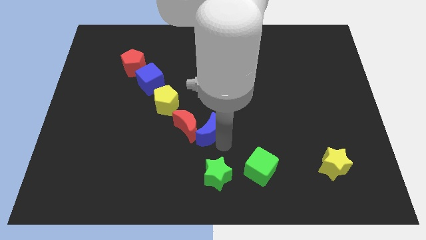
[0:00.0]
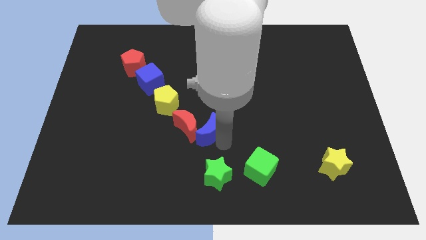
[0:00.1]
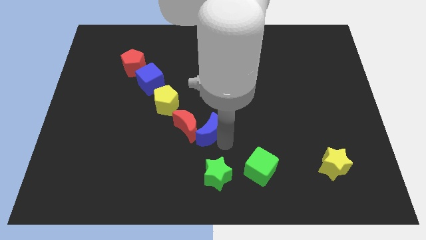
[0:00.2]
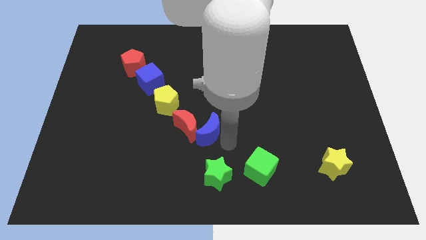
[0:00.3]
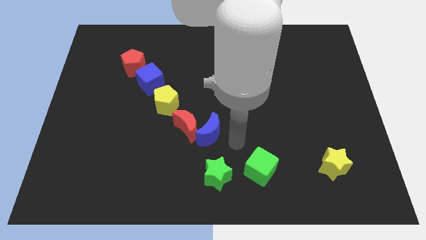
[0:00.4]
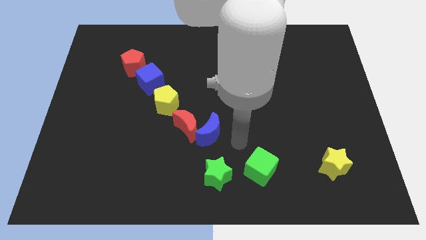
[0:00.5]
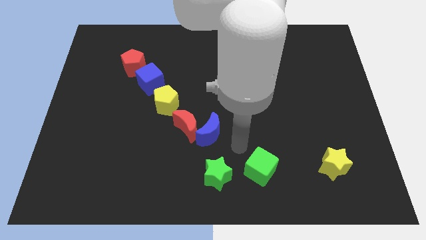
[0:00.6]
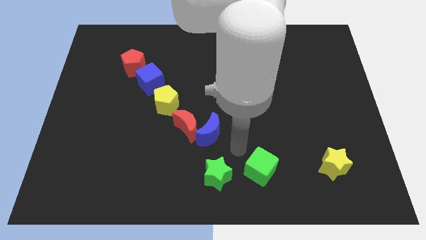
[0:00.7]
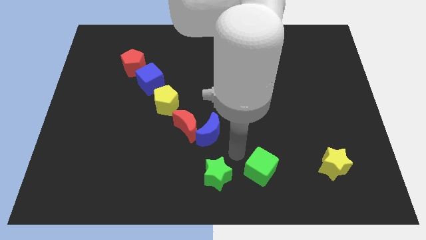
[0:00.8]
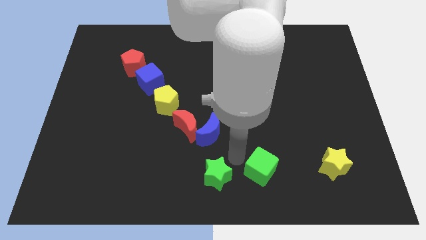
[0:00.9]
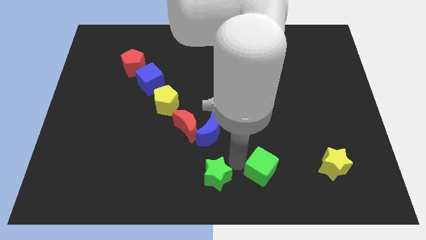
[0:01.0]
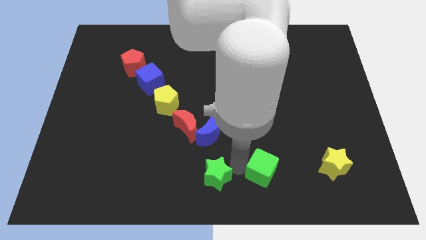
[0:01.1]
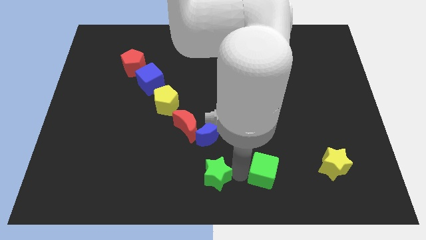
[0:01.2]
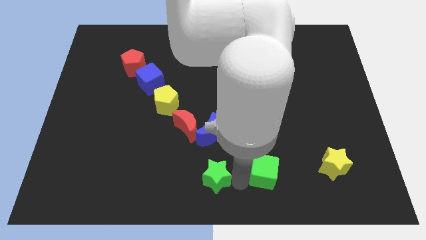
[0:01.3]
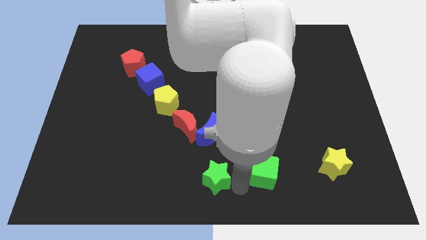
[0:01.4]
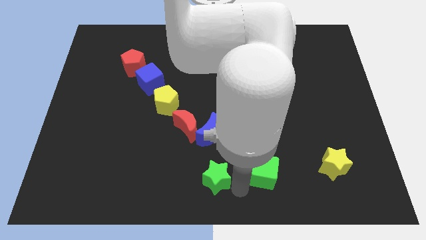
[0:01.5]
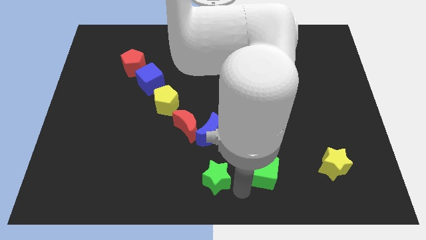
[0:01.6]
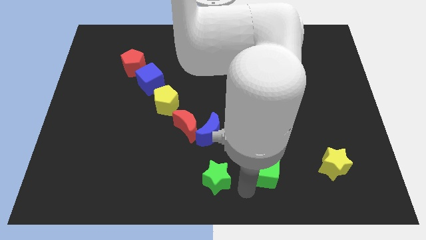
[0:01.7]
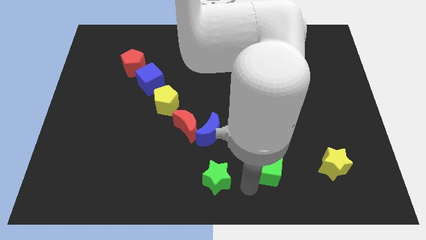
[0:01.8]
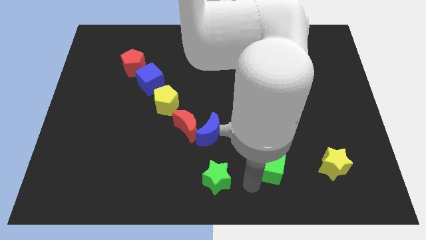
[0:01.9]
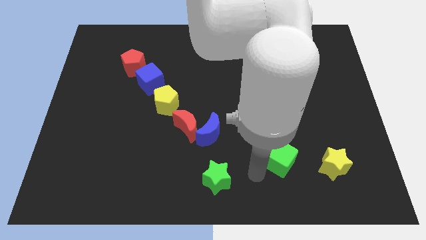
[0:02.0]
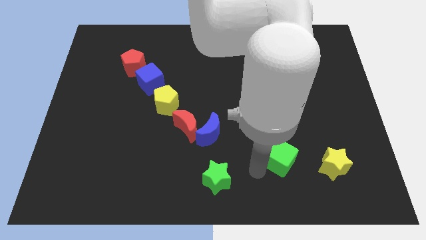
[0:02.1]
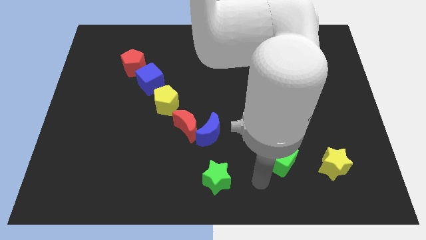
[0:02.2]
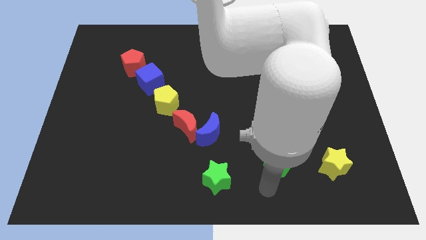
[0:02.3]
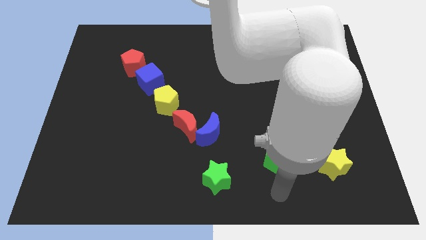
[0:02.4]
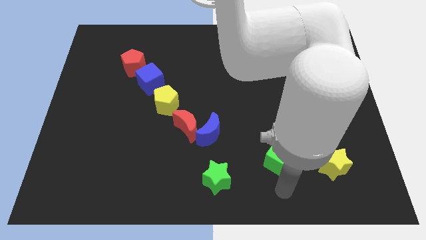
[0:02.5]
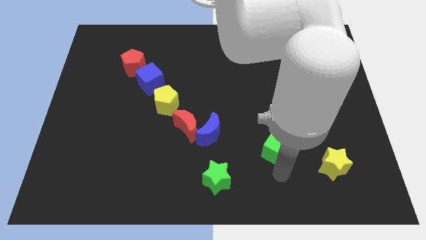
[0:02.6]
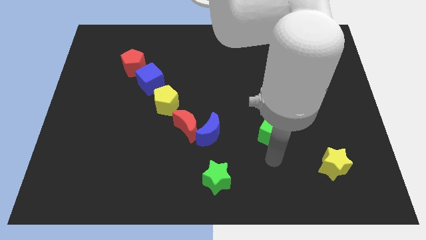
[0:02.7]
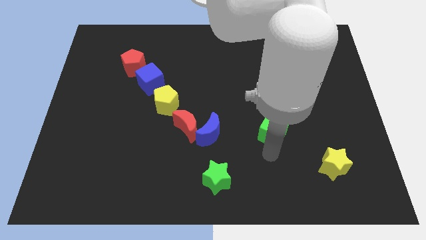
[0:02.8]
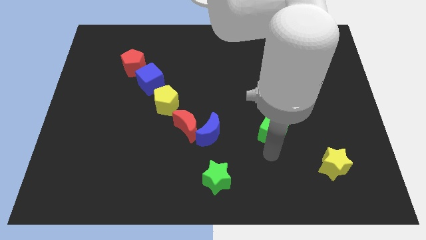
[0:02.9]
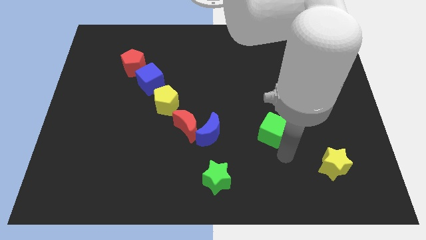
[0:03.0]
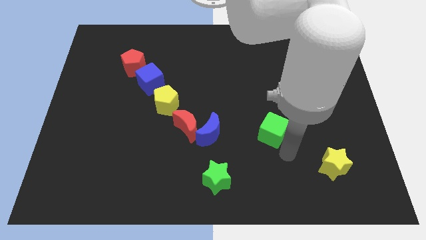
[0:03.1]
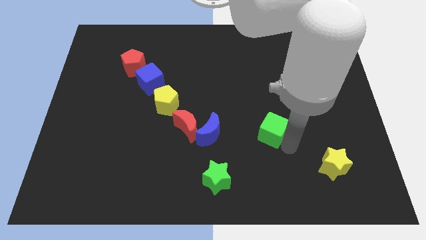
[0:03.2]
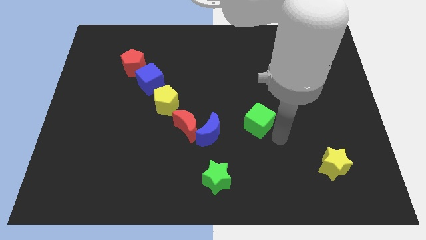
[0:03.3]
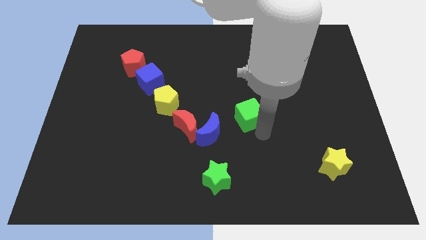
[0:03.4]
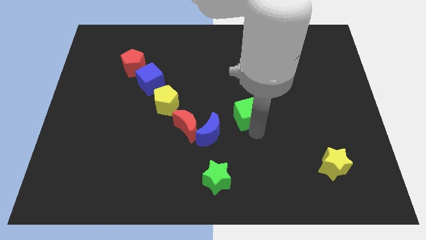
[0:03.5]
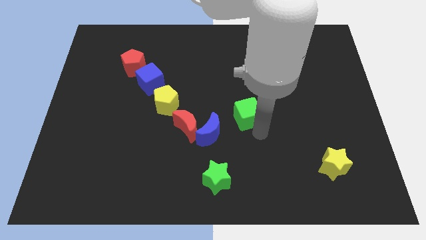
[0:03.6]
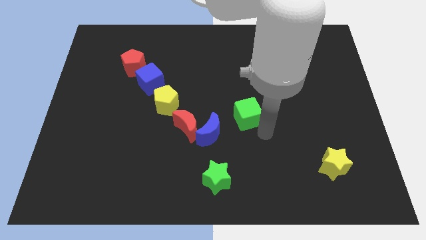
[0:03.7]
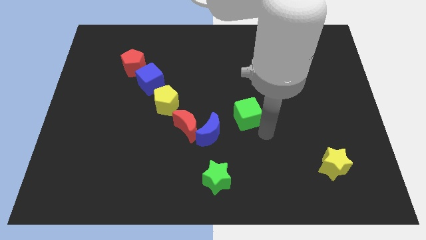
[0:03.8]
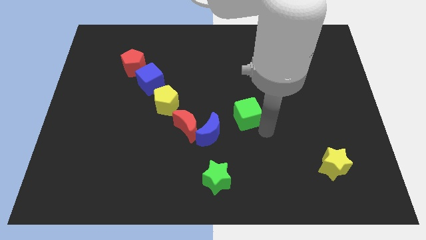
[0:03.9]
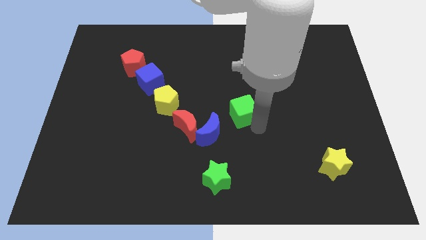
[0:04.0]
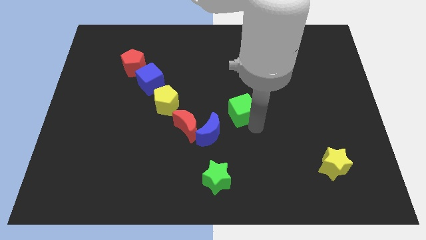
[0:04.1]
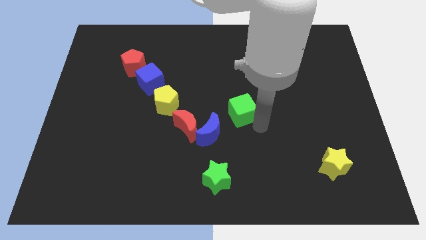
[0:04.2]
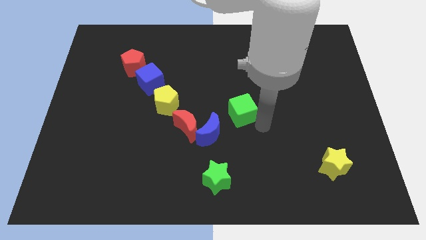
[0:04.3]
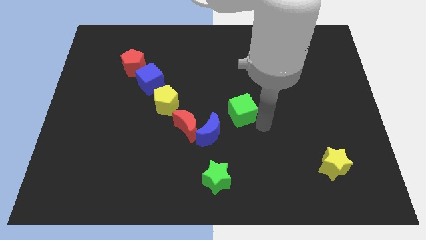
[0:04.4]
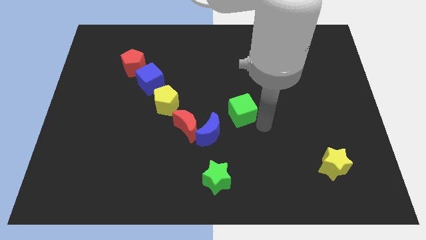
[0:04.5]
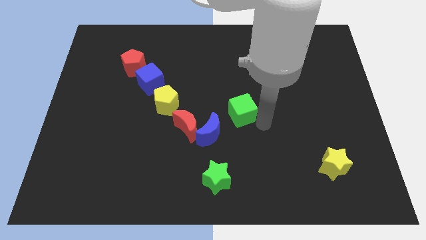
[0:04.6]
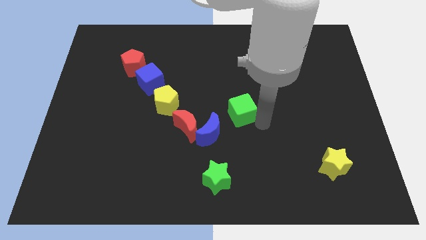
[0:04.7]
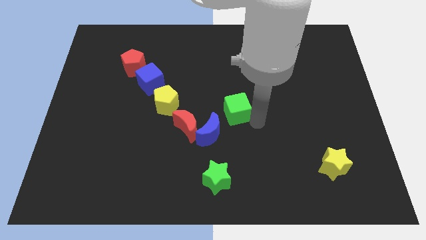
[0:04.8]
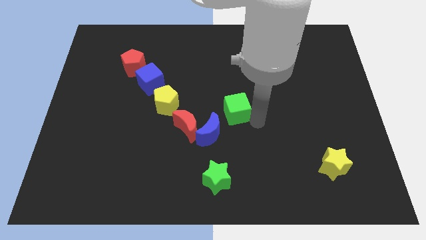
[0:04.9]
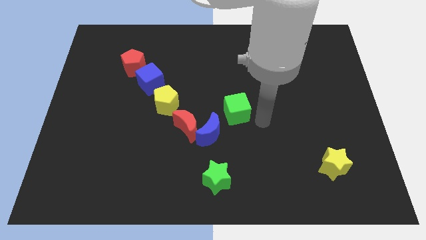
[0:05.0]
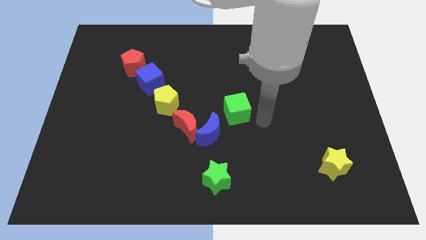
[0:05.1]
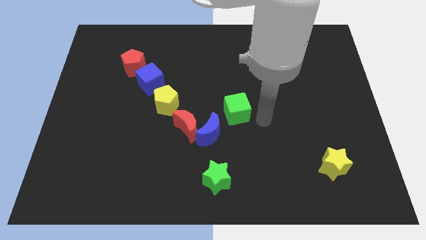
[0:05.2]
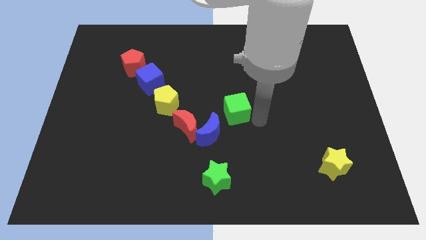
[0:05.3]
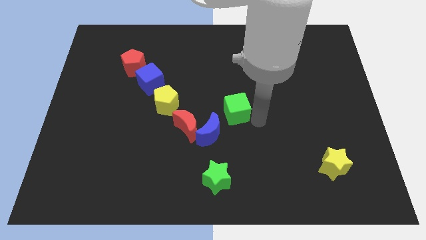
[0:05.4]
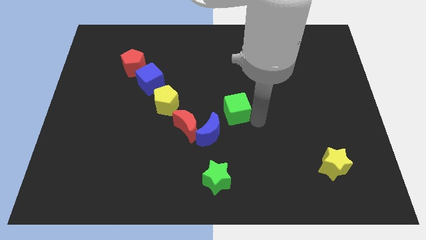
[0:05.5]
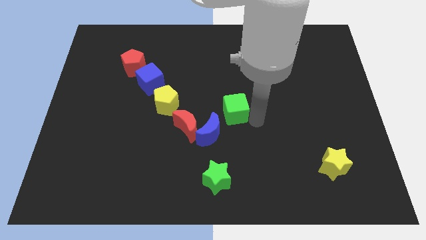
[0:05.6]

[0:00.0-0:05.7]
apart green star and green cube

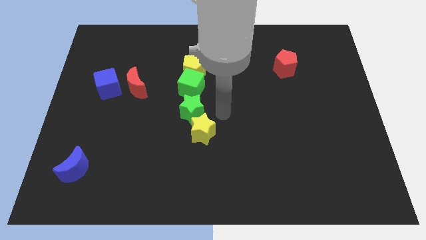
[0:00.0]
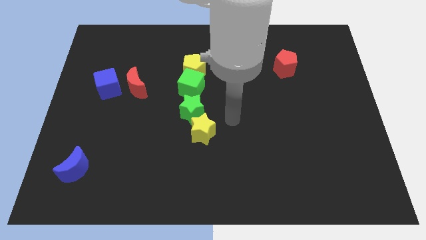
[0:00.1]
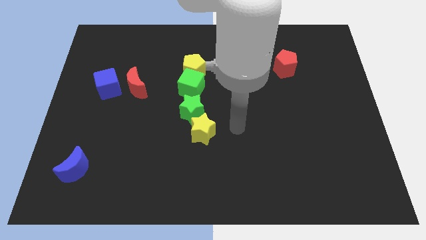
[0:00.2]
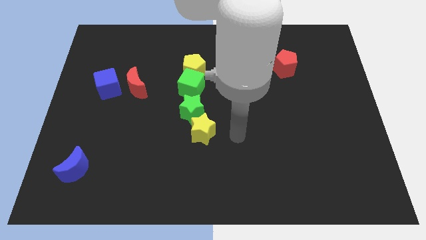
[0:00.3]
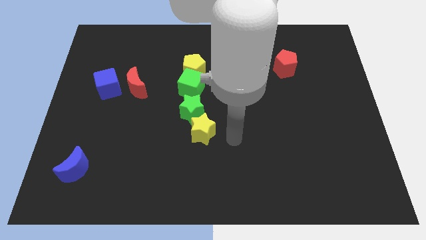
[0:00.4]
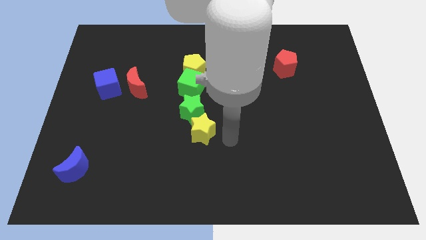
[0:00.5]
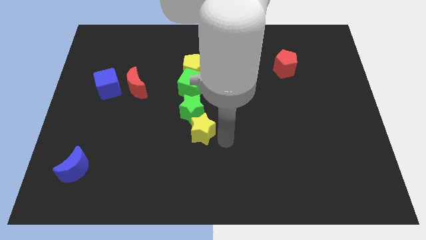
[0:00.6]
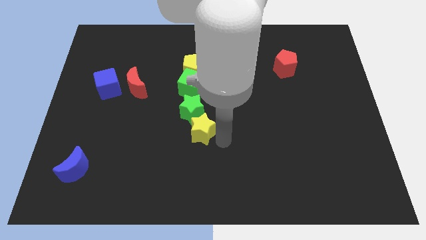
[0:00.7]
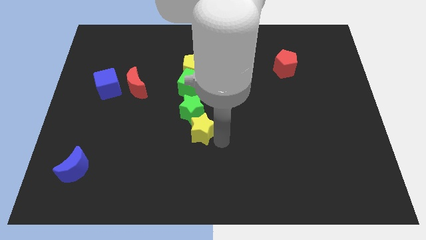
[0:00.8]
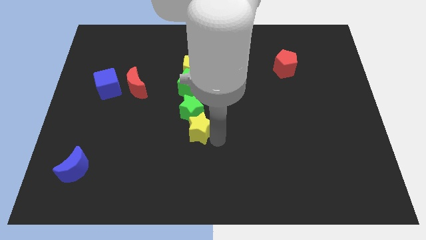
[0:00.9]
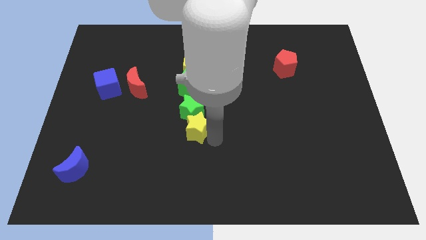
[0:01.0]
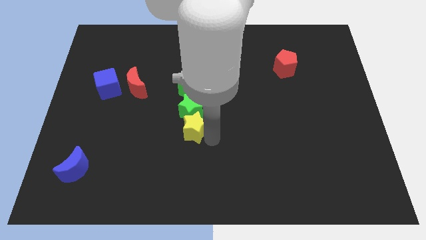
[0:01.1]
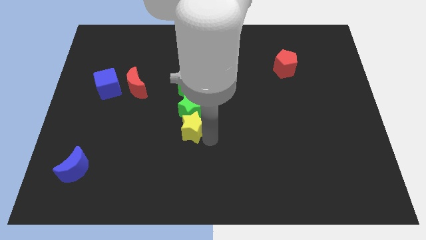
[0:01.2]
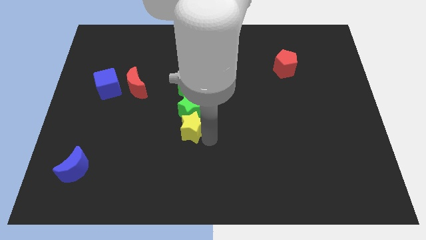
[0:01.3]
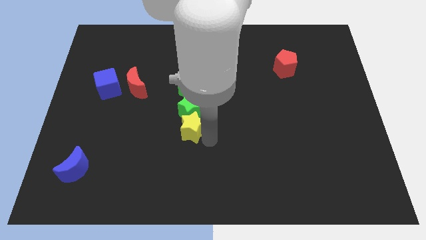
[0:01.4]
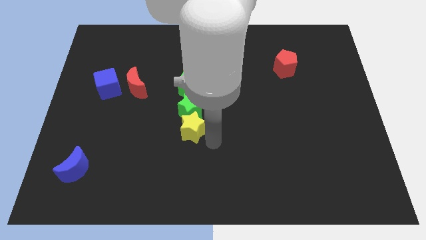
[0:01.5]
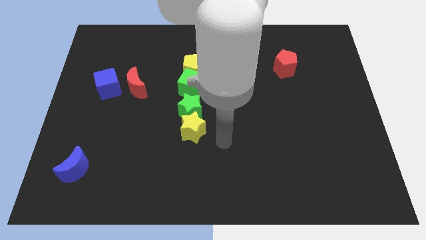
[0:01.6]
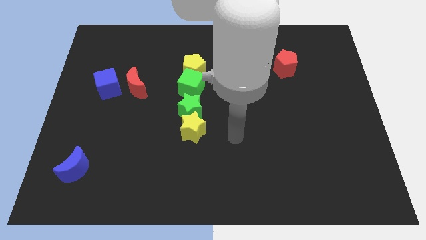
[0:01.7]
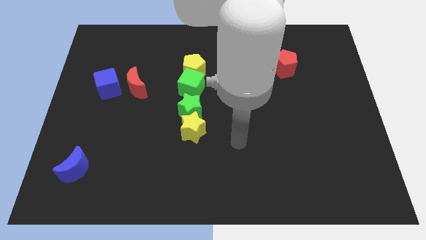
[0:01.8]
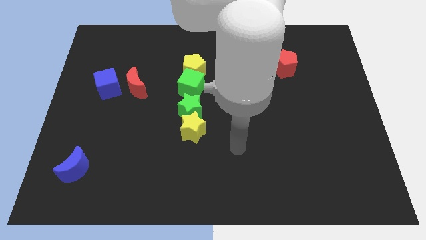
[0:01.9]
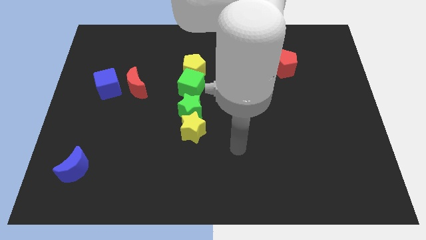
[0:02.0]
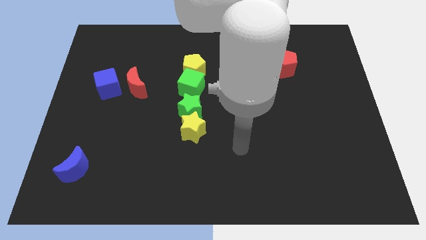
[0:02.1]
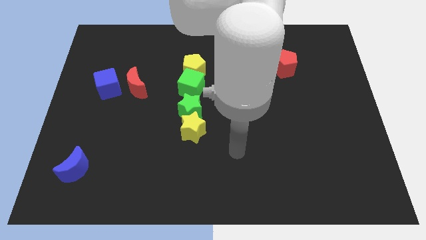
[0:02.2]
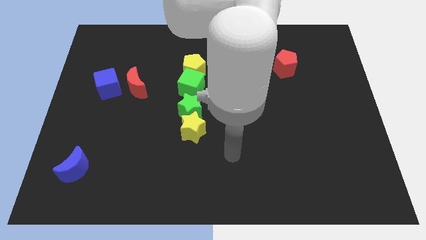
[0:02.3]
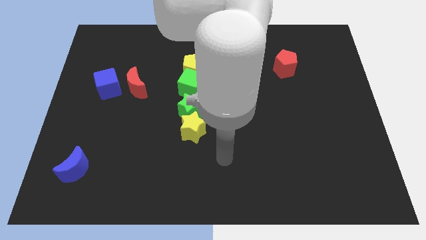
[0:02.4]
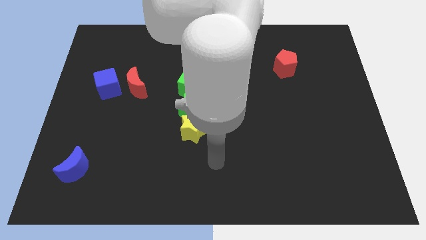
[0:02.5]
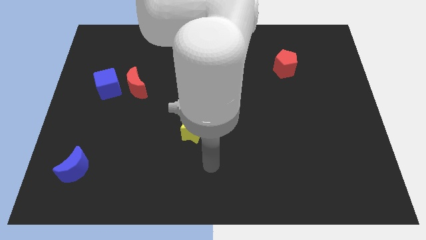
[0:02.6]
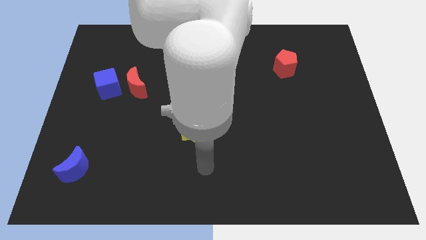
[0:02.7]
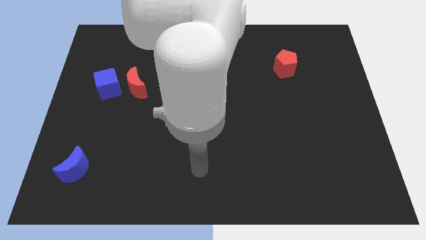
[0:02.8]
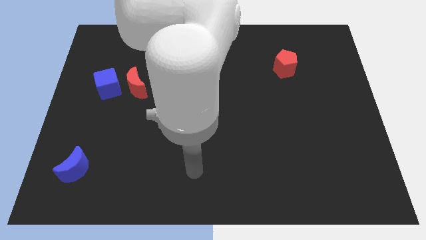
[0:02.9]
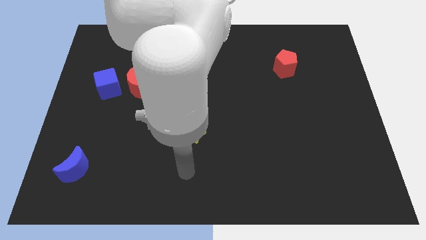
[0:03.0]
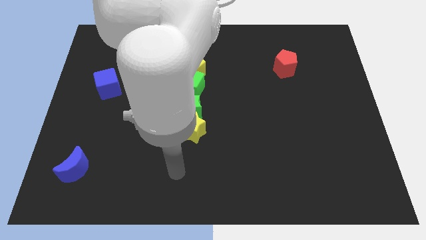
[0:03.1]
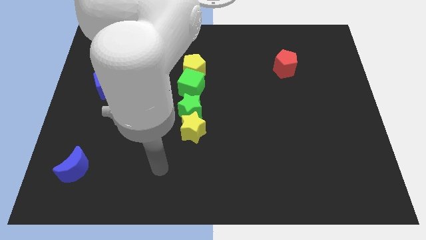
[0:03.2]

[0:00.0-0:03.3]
adjust the yellow star and make a vertical line

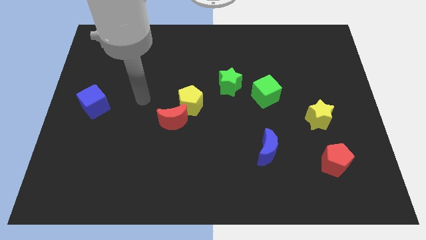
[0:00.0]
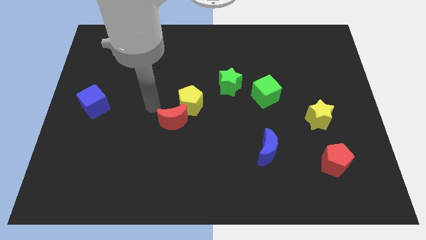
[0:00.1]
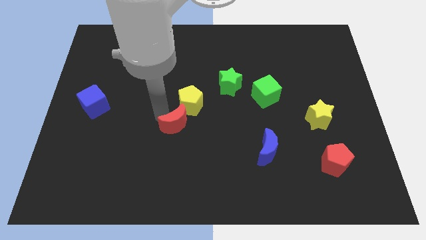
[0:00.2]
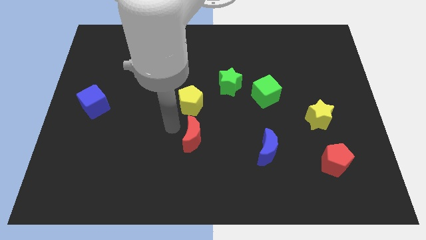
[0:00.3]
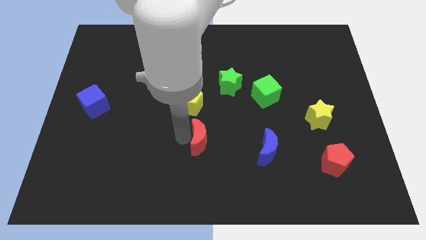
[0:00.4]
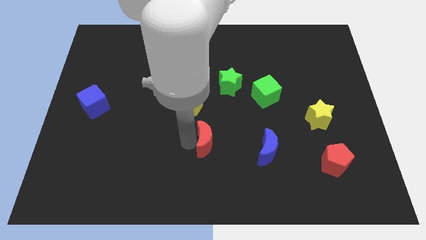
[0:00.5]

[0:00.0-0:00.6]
place the red moon below the yellow pentagon
